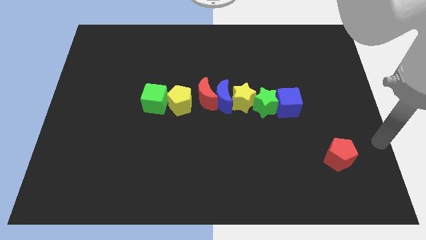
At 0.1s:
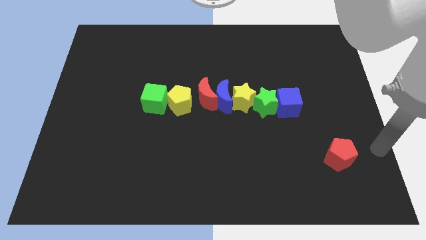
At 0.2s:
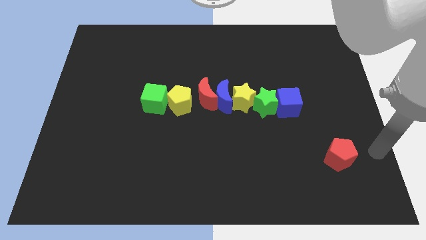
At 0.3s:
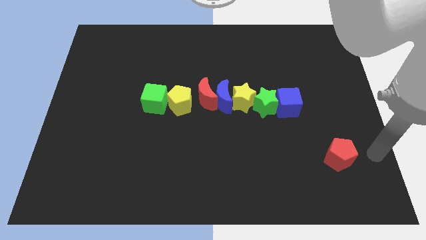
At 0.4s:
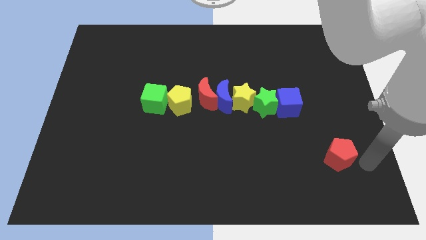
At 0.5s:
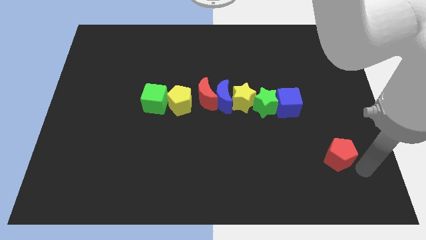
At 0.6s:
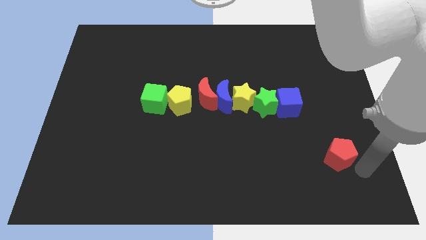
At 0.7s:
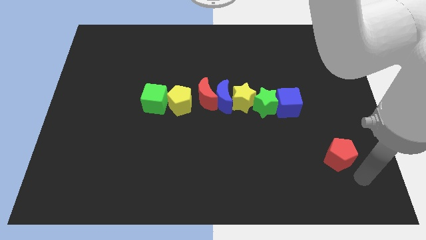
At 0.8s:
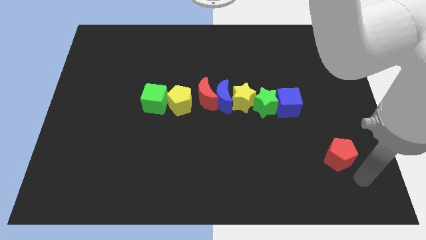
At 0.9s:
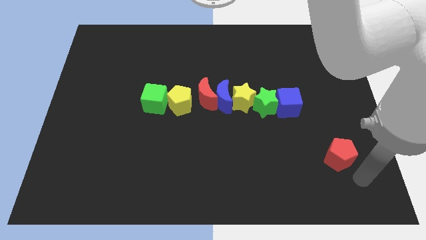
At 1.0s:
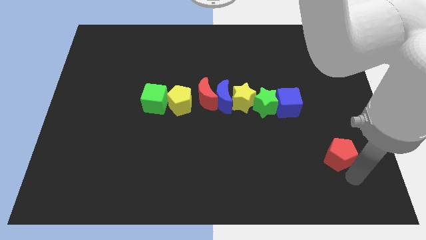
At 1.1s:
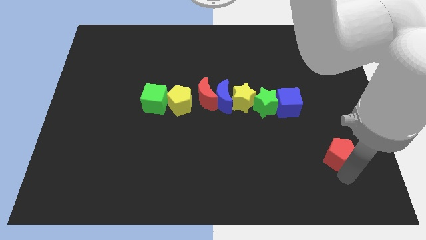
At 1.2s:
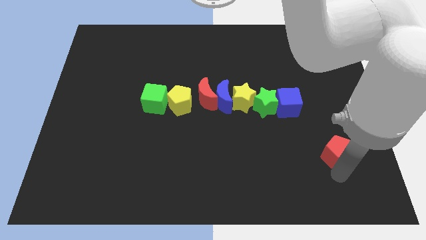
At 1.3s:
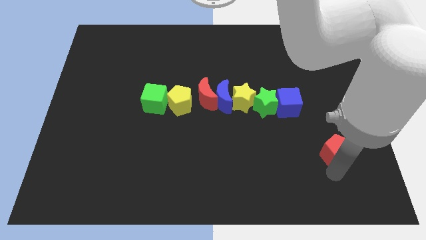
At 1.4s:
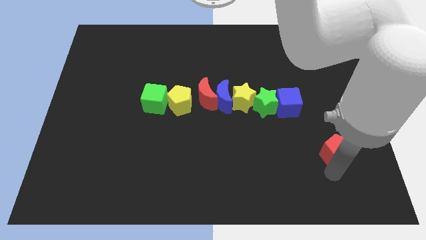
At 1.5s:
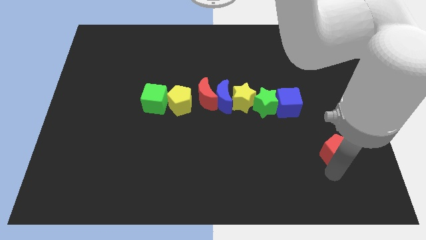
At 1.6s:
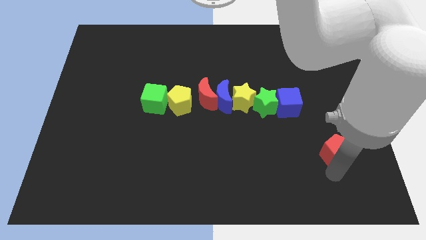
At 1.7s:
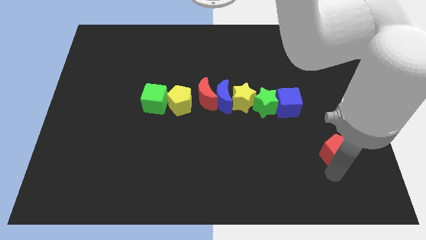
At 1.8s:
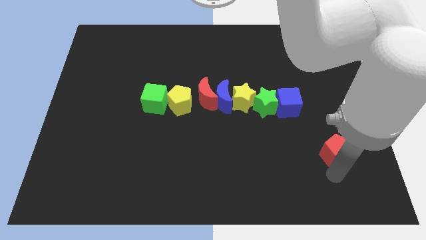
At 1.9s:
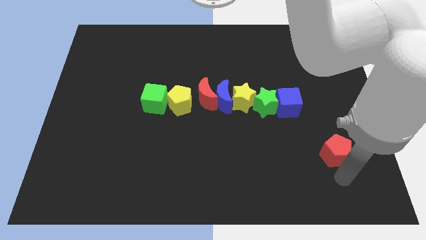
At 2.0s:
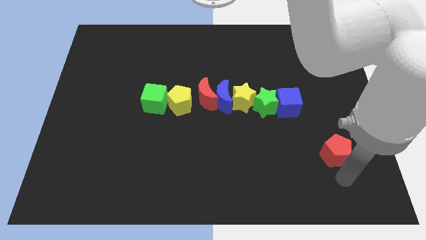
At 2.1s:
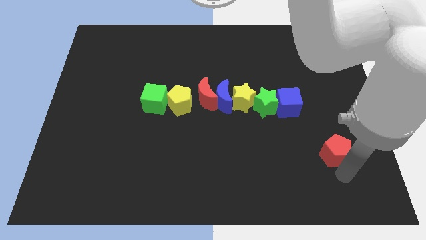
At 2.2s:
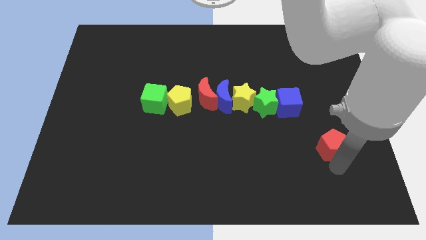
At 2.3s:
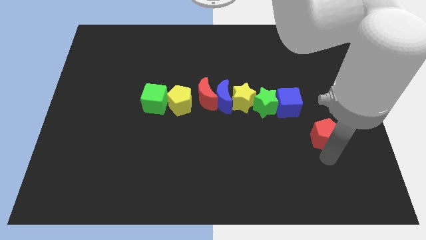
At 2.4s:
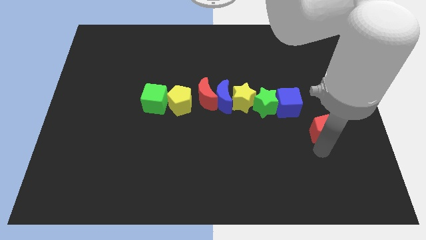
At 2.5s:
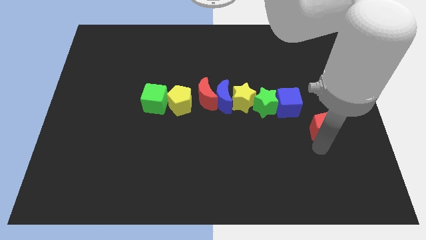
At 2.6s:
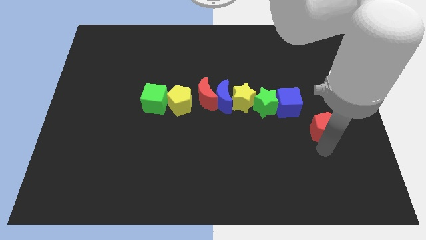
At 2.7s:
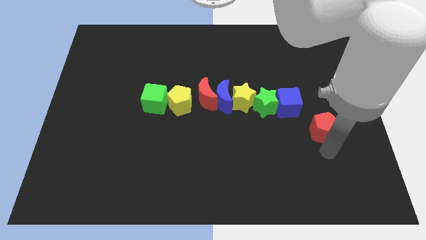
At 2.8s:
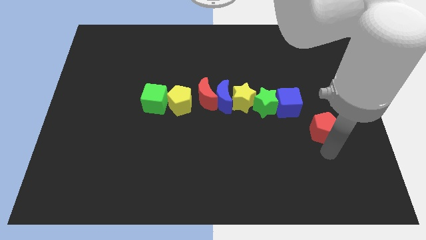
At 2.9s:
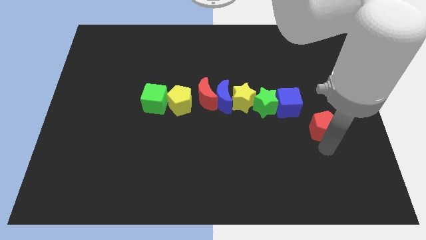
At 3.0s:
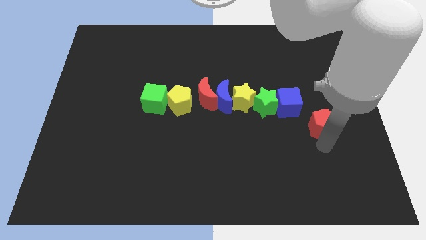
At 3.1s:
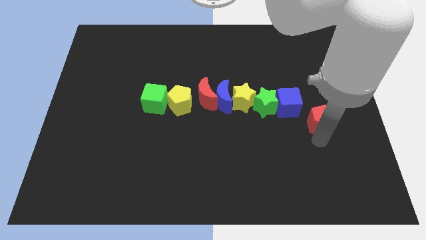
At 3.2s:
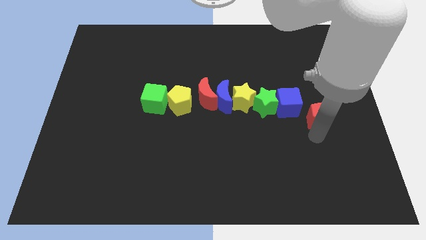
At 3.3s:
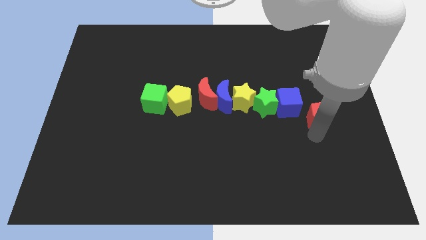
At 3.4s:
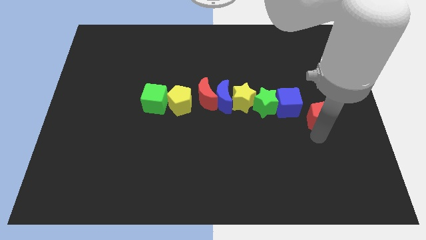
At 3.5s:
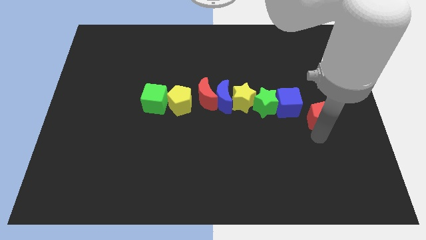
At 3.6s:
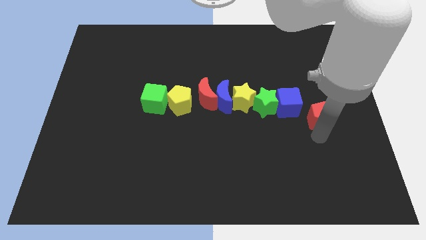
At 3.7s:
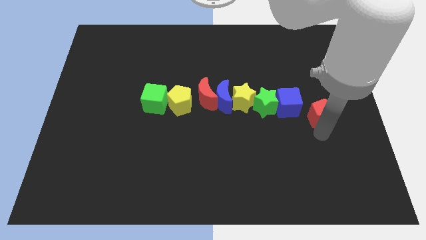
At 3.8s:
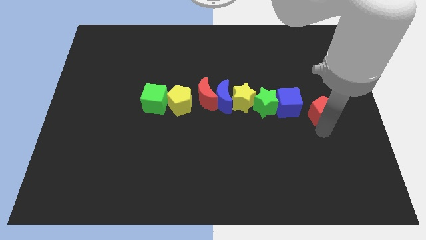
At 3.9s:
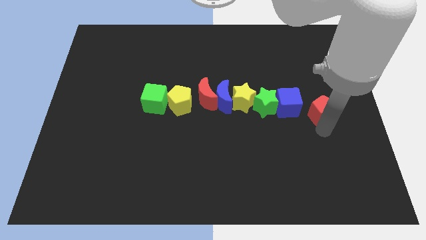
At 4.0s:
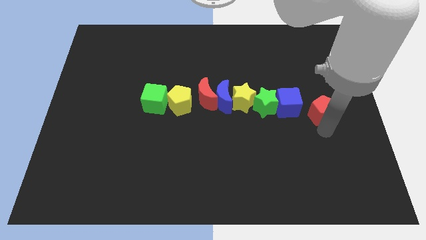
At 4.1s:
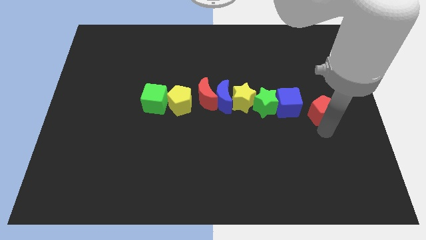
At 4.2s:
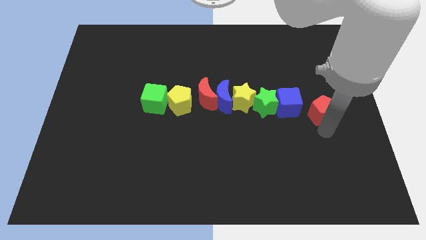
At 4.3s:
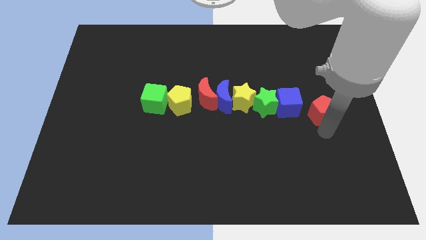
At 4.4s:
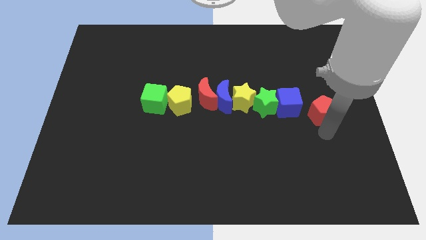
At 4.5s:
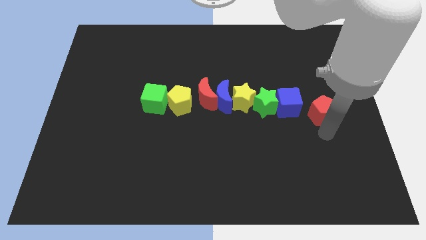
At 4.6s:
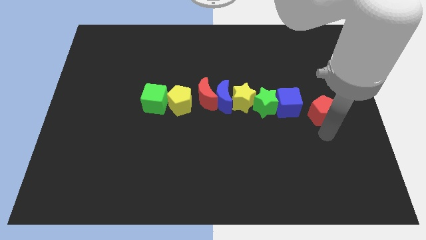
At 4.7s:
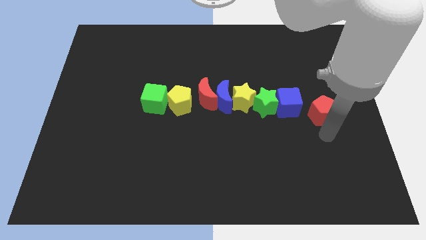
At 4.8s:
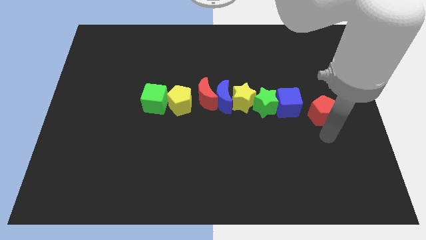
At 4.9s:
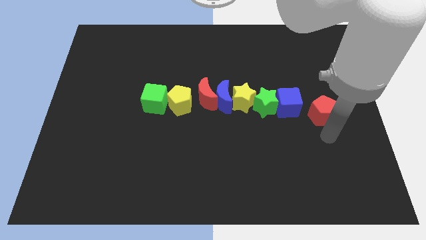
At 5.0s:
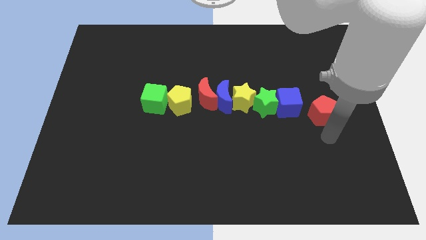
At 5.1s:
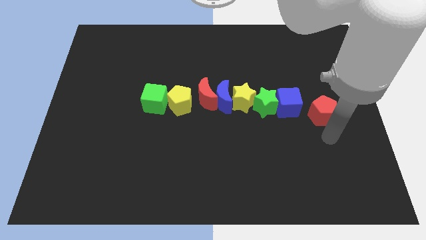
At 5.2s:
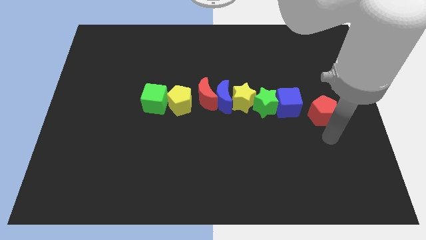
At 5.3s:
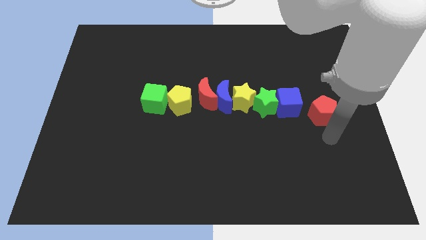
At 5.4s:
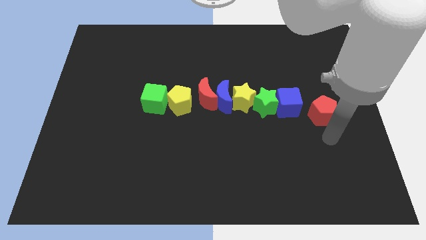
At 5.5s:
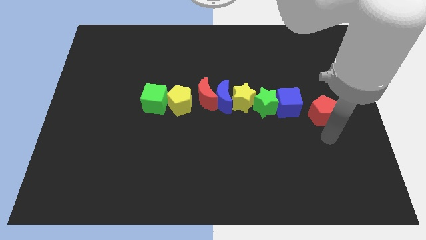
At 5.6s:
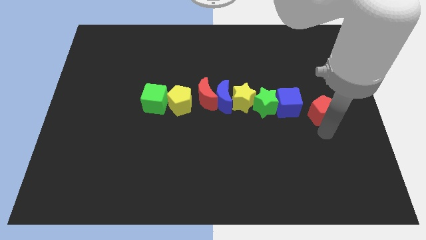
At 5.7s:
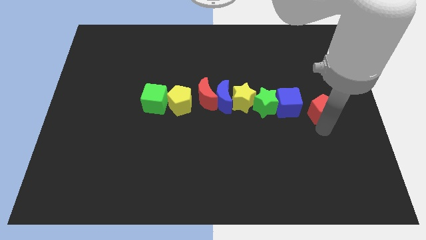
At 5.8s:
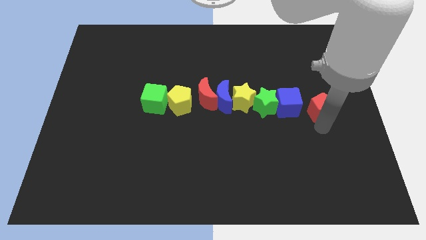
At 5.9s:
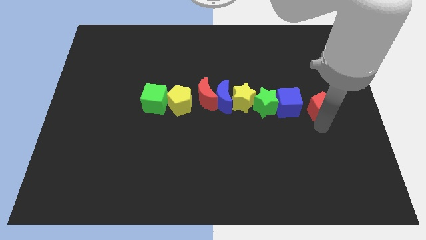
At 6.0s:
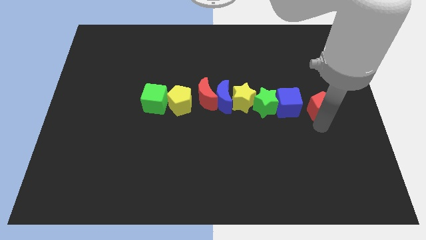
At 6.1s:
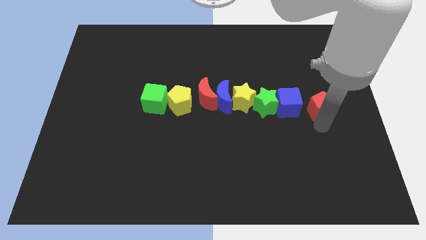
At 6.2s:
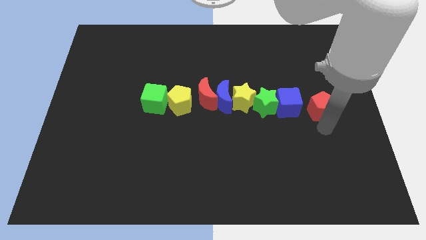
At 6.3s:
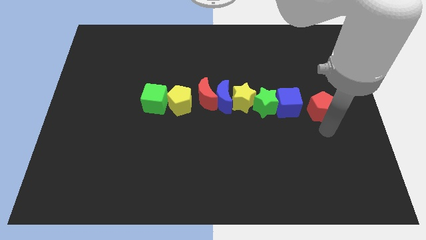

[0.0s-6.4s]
slide red pentagon to right of blue cube

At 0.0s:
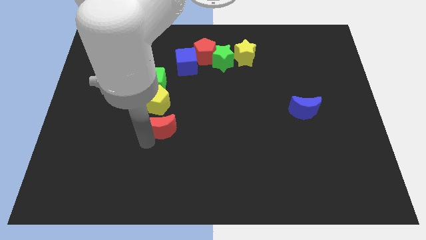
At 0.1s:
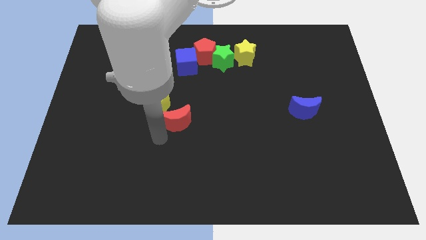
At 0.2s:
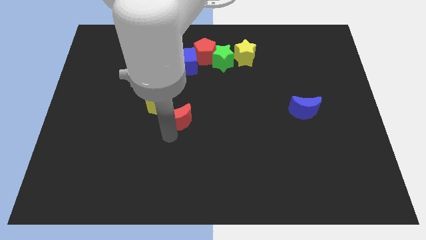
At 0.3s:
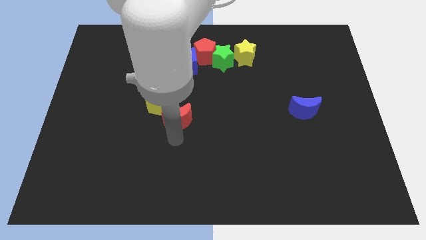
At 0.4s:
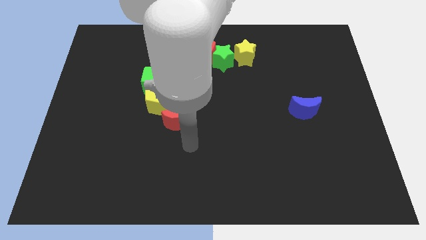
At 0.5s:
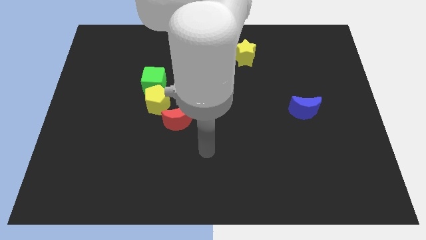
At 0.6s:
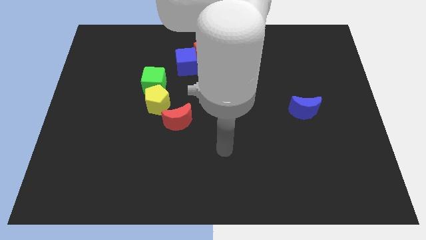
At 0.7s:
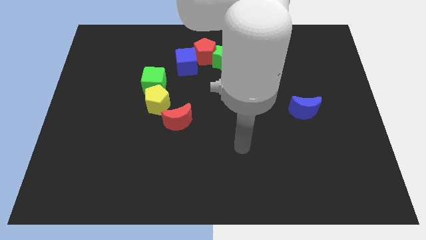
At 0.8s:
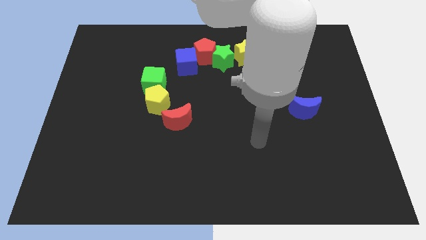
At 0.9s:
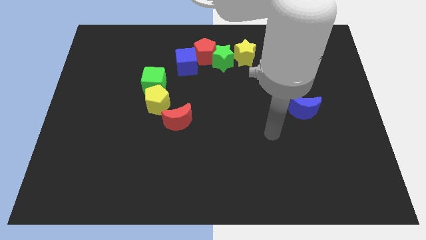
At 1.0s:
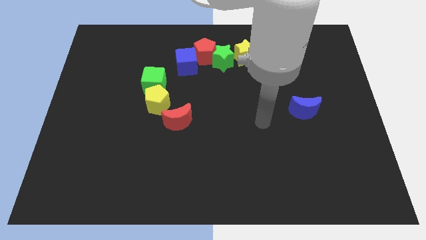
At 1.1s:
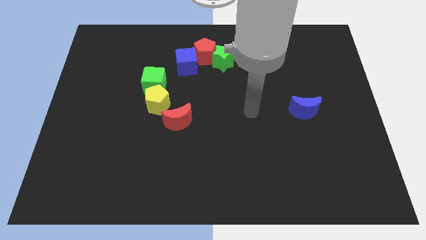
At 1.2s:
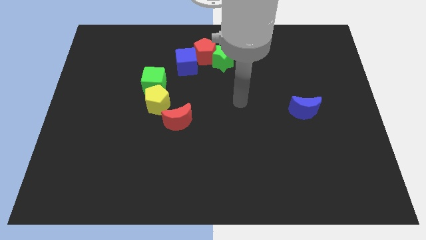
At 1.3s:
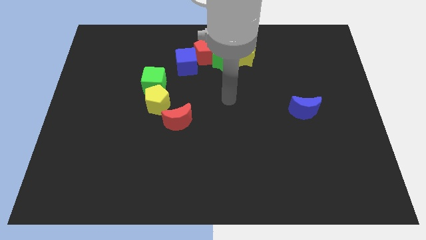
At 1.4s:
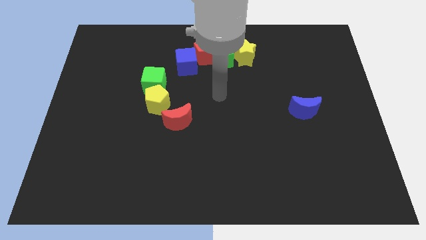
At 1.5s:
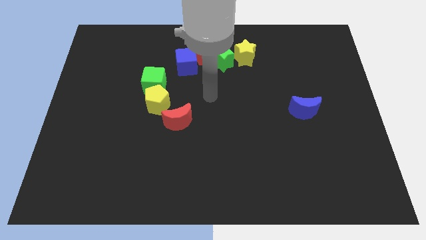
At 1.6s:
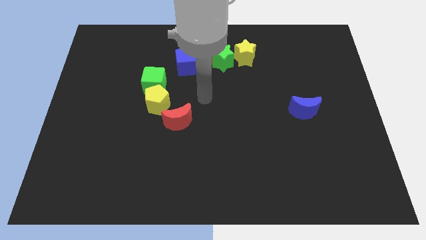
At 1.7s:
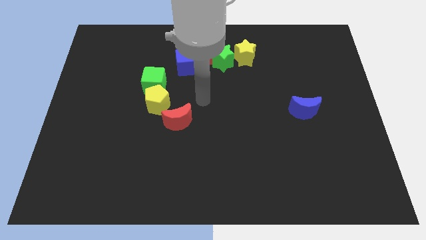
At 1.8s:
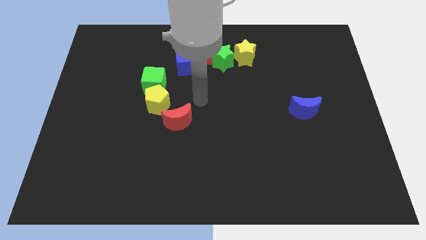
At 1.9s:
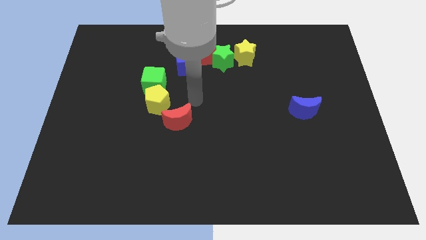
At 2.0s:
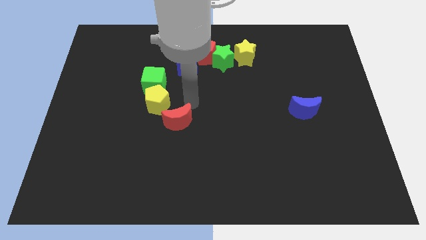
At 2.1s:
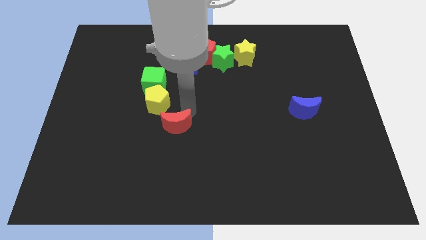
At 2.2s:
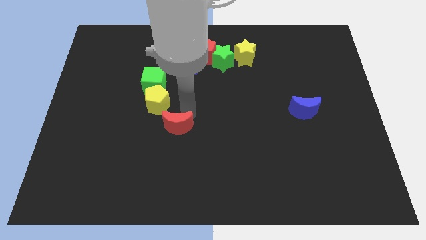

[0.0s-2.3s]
touch the top side of the red moon

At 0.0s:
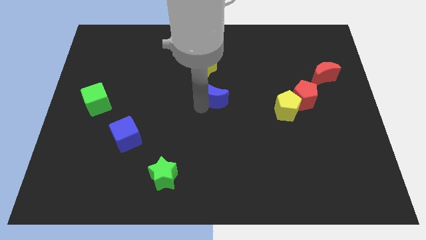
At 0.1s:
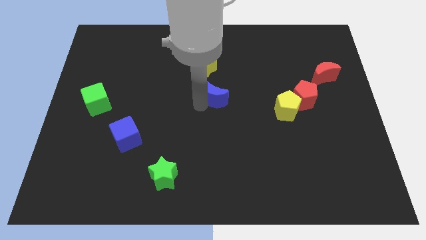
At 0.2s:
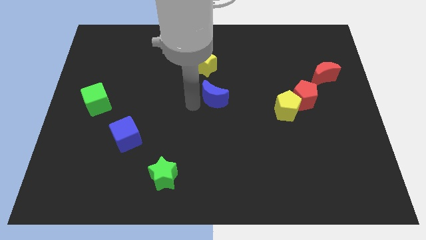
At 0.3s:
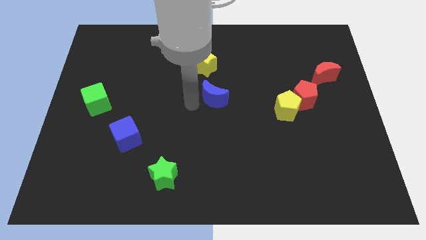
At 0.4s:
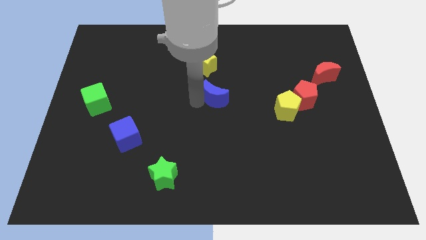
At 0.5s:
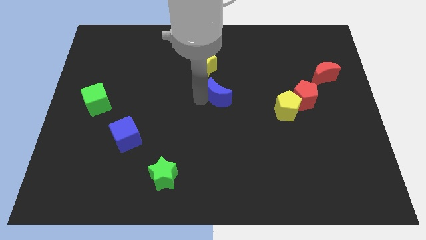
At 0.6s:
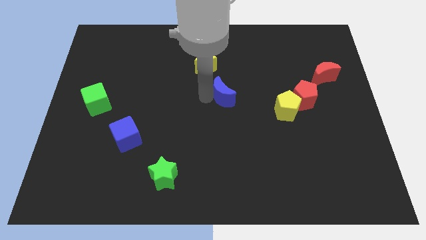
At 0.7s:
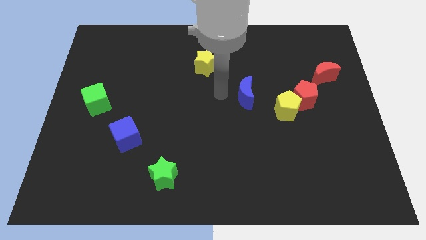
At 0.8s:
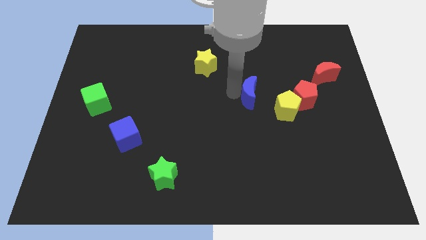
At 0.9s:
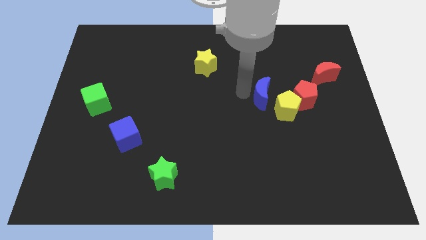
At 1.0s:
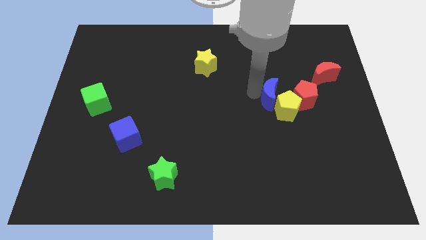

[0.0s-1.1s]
place blue moon to the top left of yellow pentagon
